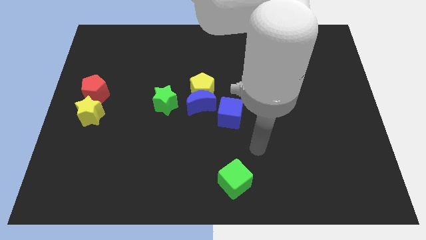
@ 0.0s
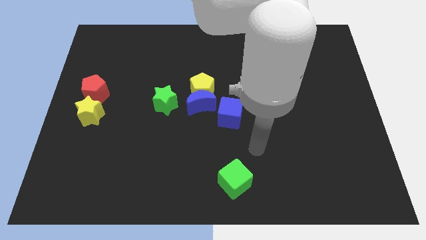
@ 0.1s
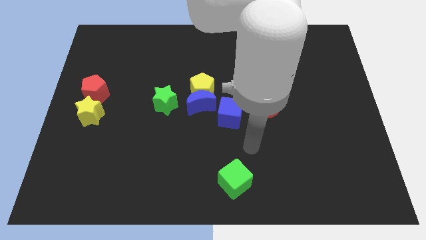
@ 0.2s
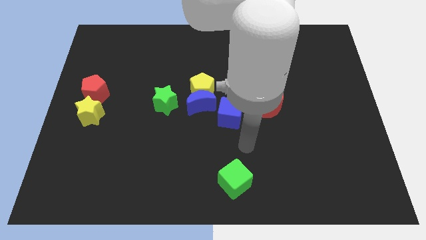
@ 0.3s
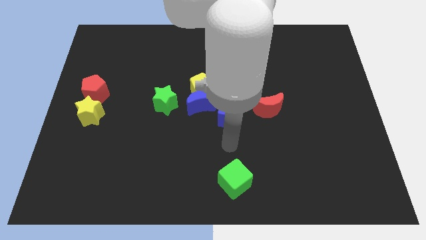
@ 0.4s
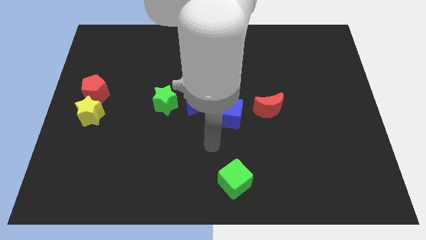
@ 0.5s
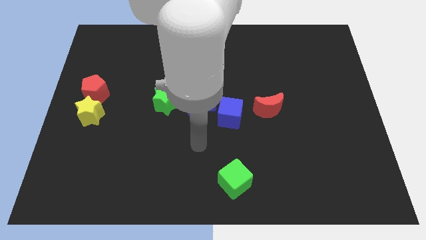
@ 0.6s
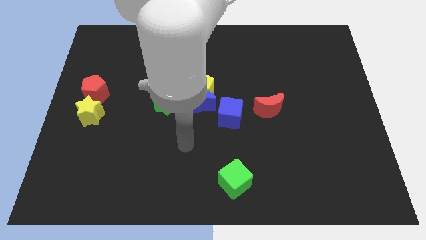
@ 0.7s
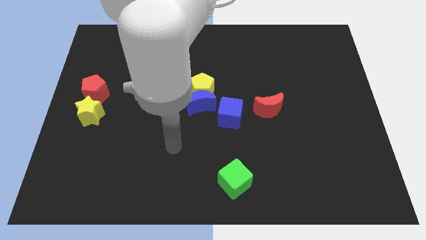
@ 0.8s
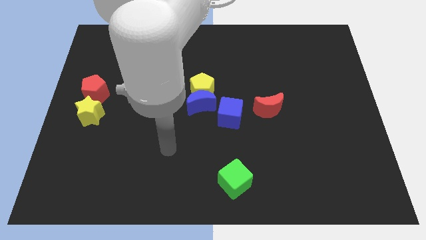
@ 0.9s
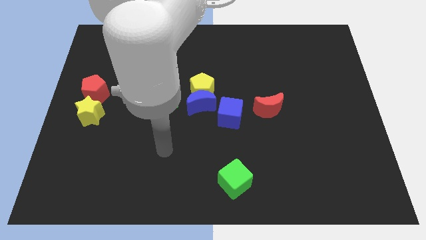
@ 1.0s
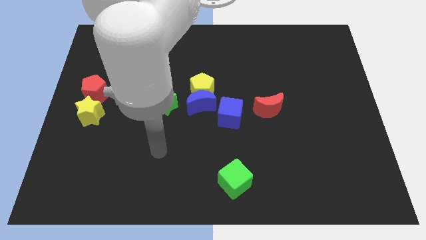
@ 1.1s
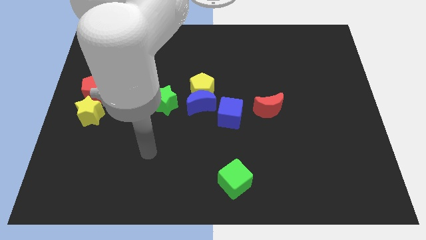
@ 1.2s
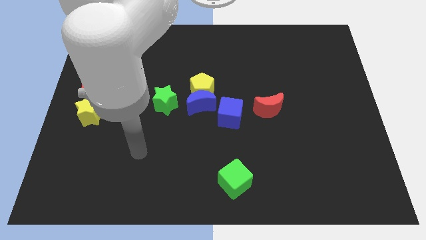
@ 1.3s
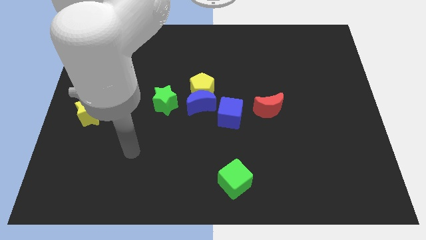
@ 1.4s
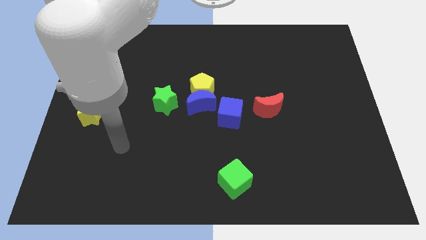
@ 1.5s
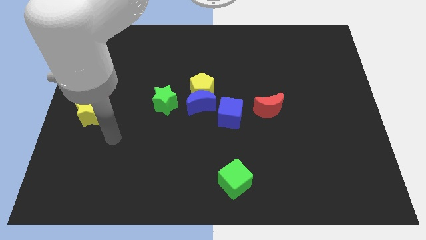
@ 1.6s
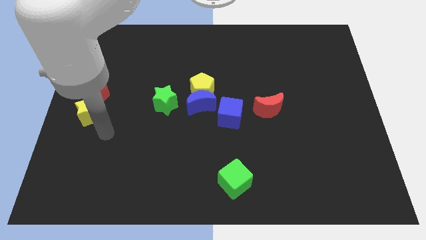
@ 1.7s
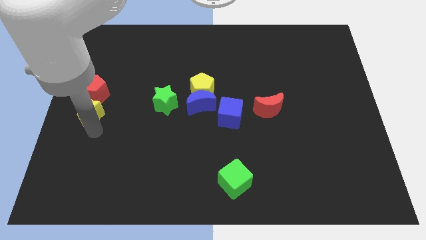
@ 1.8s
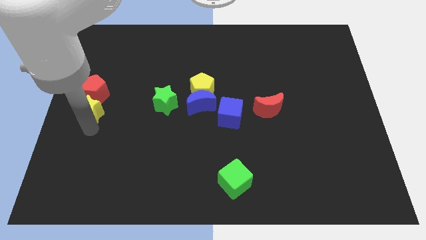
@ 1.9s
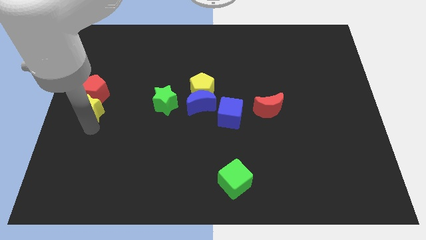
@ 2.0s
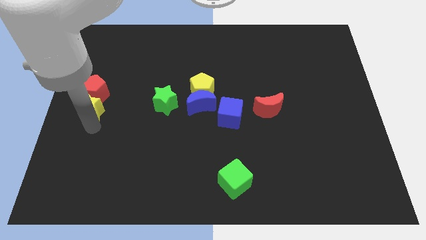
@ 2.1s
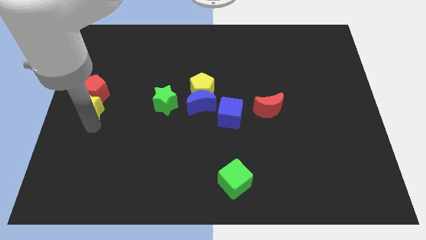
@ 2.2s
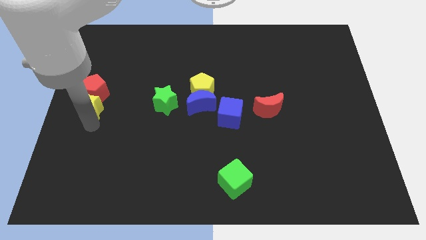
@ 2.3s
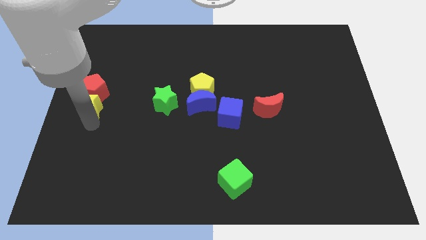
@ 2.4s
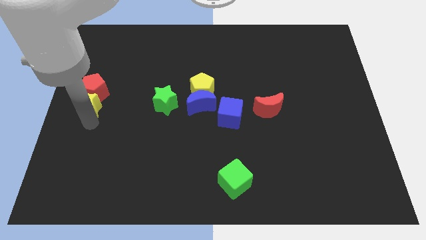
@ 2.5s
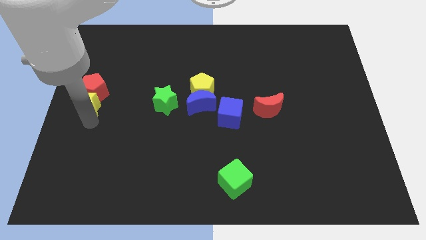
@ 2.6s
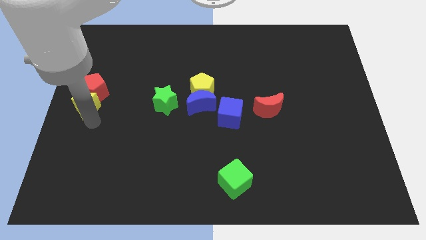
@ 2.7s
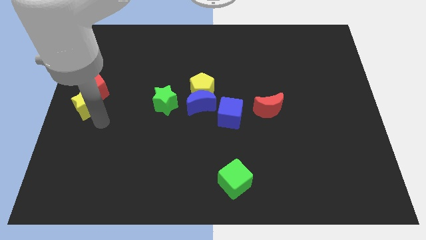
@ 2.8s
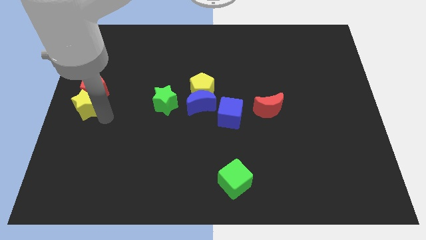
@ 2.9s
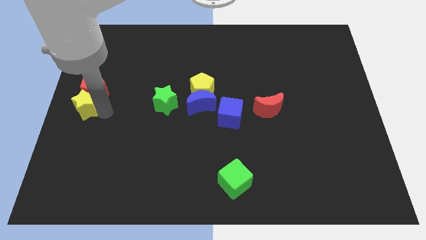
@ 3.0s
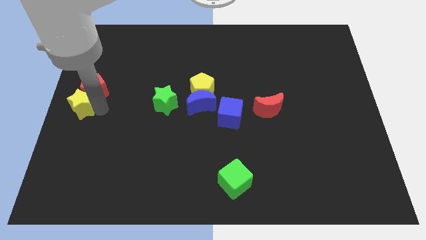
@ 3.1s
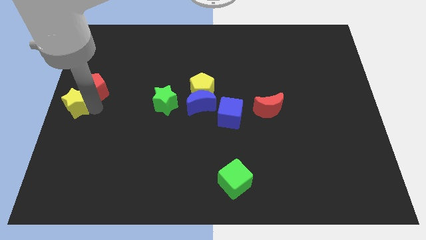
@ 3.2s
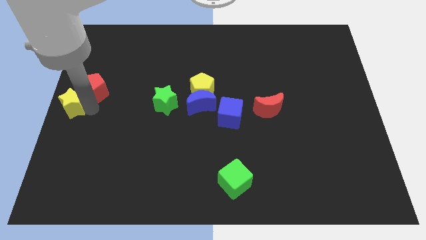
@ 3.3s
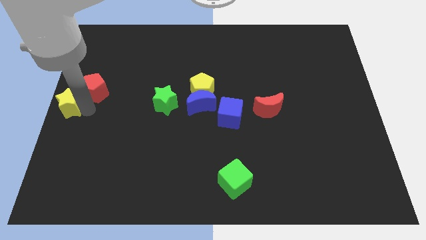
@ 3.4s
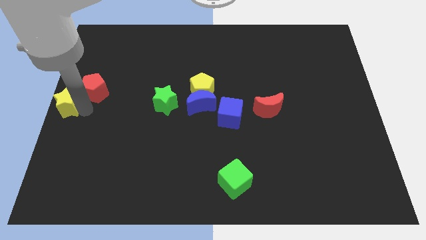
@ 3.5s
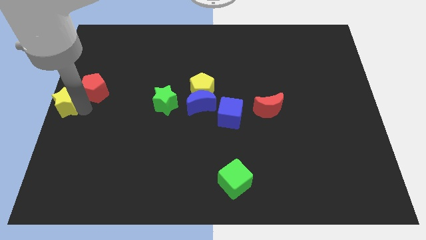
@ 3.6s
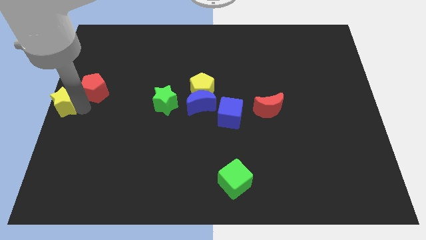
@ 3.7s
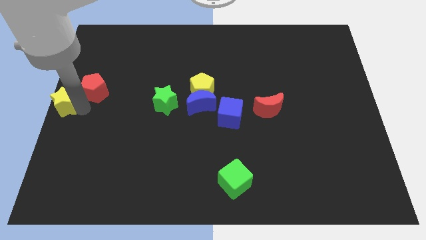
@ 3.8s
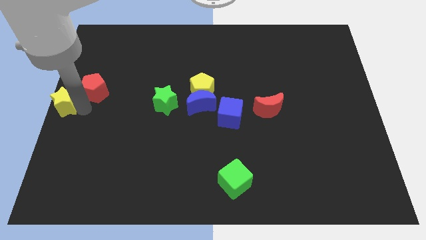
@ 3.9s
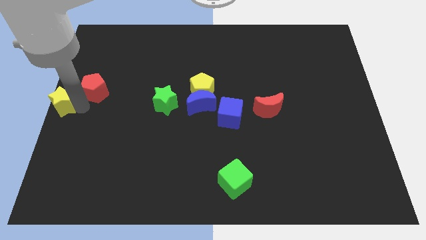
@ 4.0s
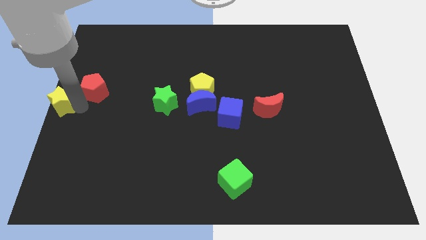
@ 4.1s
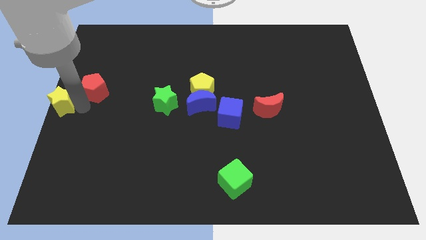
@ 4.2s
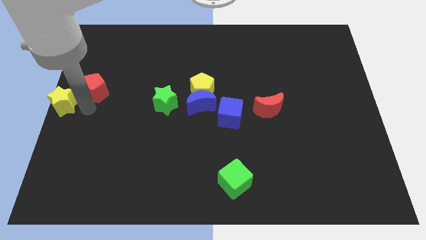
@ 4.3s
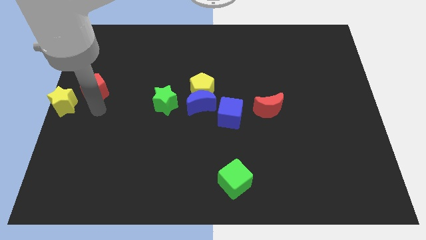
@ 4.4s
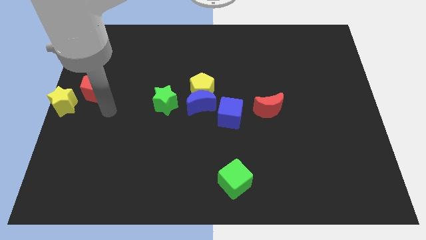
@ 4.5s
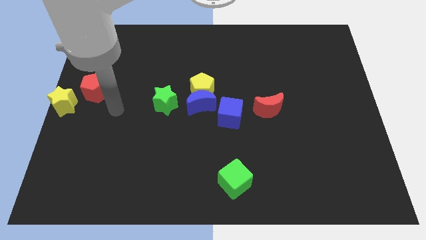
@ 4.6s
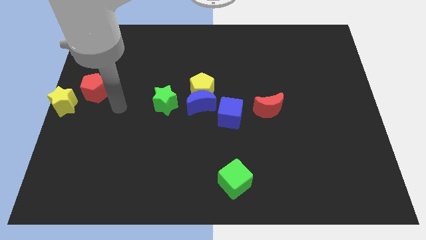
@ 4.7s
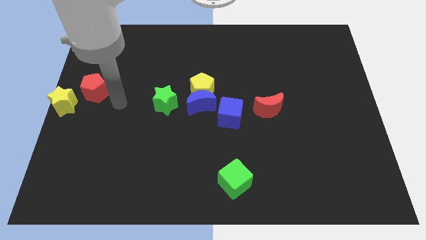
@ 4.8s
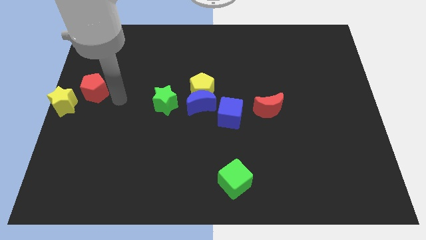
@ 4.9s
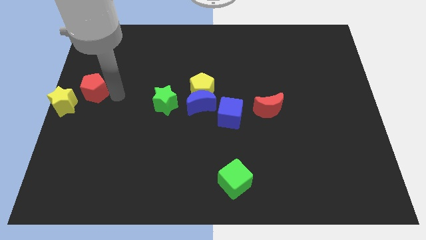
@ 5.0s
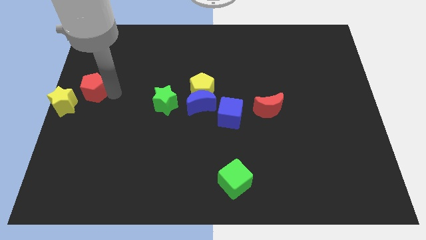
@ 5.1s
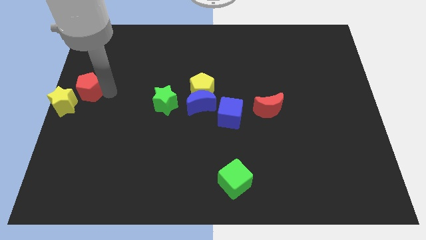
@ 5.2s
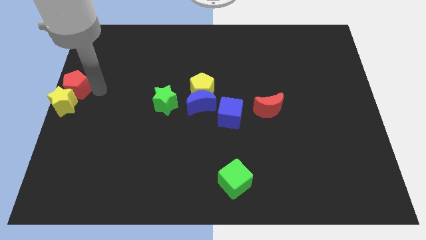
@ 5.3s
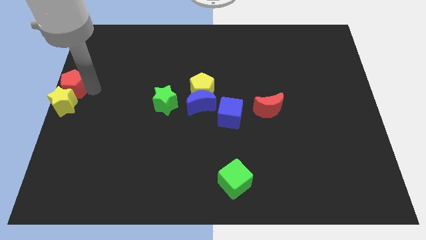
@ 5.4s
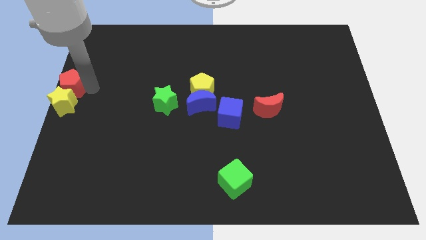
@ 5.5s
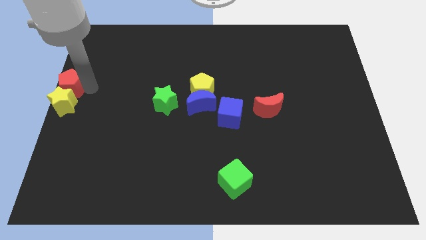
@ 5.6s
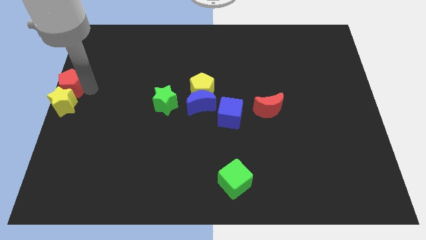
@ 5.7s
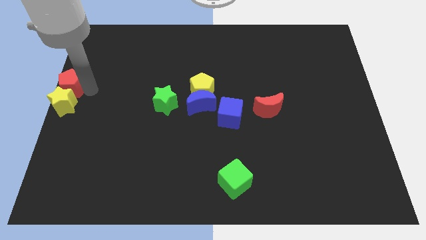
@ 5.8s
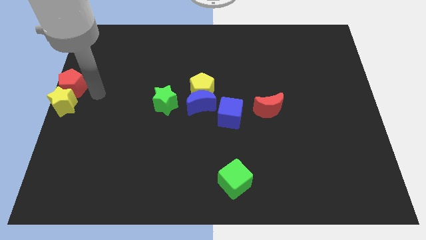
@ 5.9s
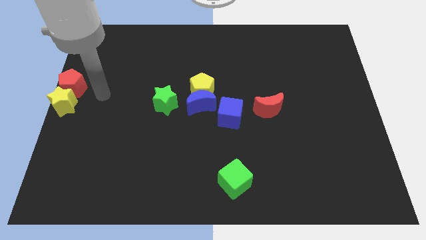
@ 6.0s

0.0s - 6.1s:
place red pentagon and yellow star to the left center of the board

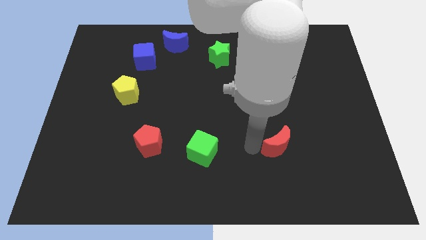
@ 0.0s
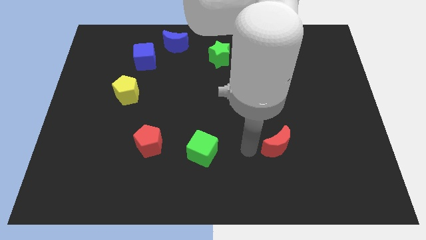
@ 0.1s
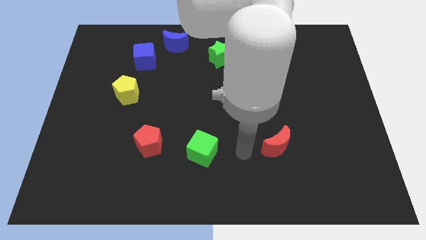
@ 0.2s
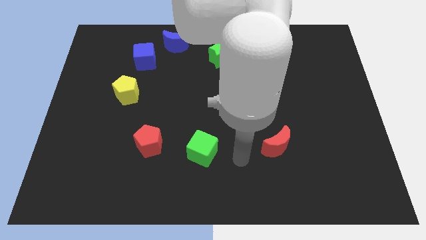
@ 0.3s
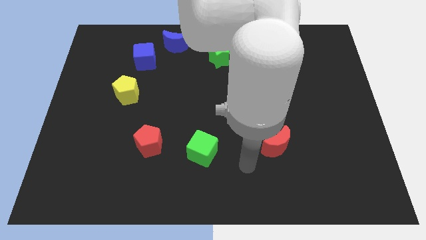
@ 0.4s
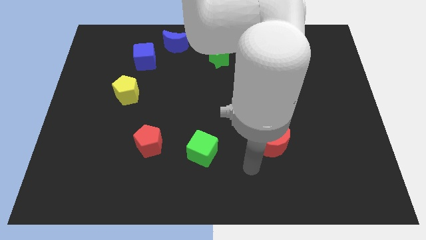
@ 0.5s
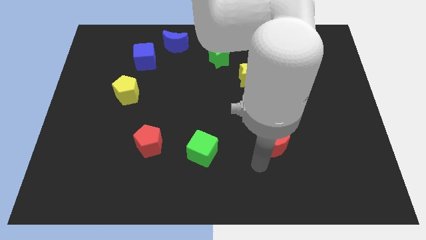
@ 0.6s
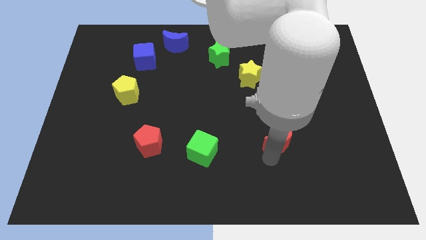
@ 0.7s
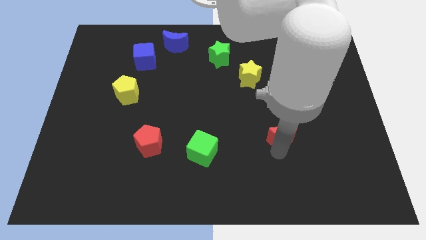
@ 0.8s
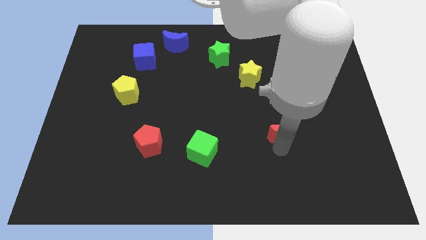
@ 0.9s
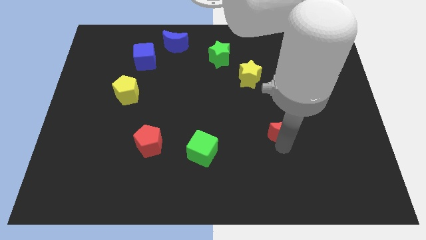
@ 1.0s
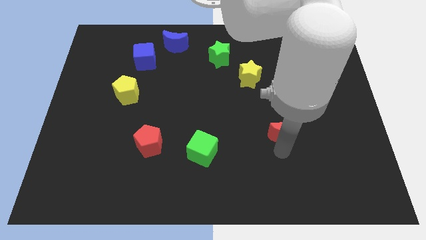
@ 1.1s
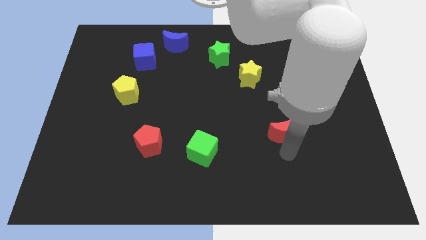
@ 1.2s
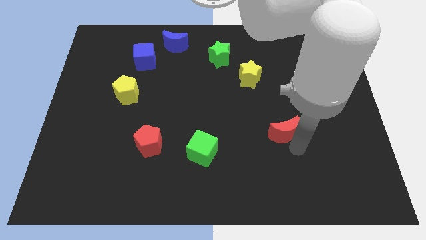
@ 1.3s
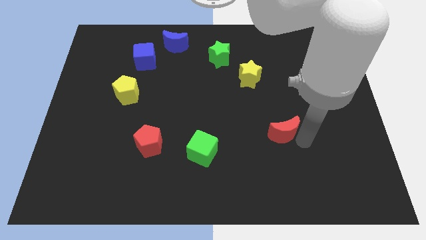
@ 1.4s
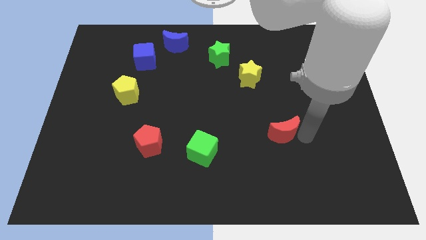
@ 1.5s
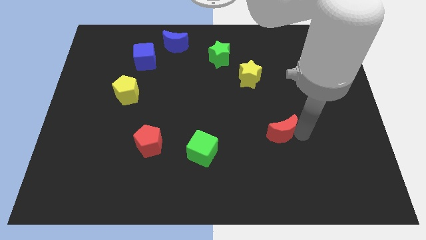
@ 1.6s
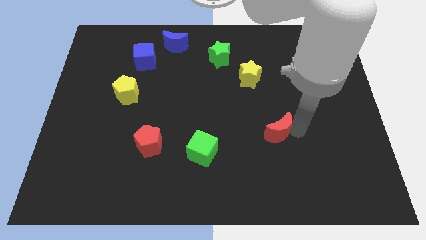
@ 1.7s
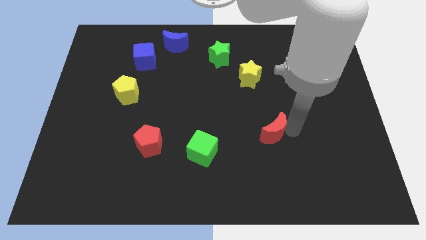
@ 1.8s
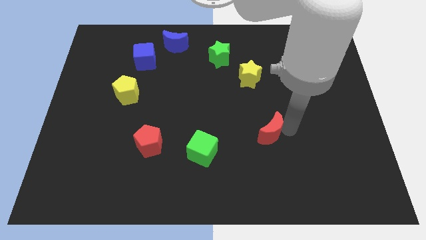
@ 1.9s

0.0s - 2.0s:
move red crescent slightly

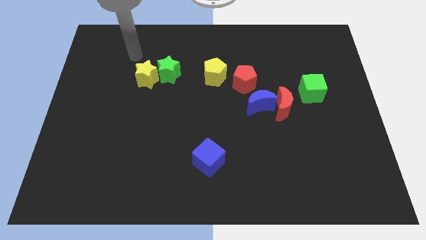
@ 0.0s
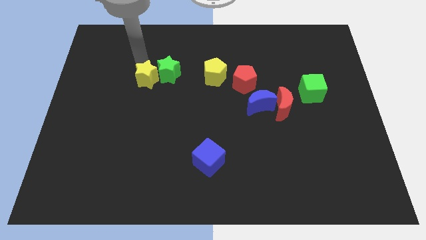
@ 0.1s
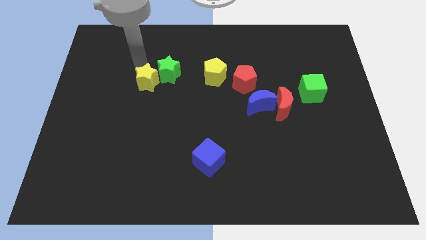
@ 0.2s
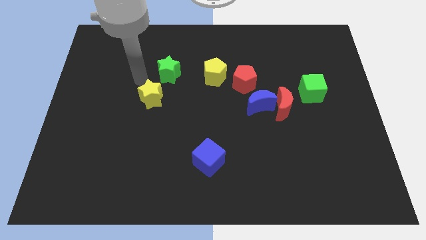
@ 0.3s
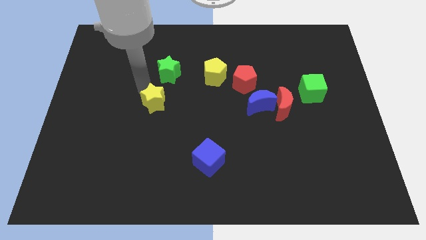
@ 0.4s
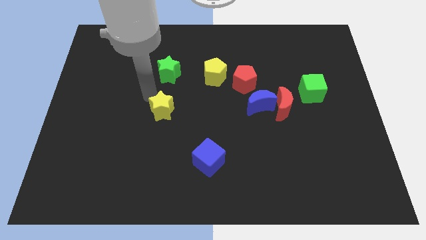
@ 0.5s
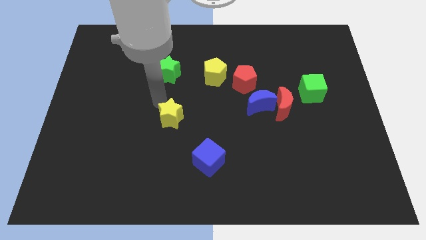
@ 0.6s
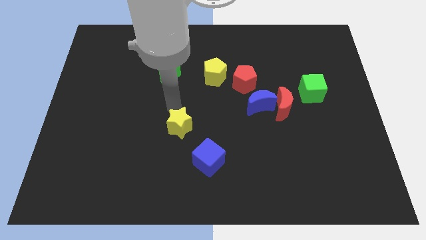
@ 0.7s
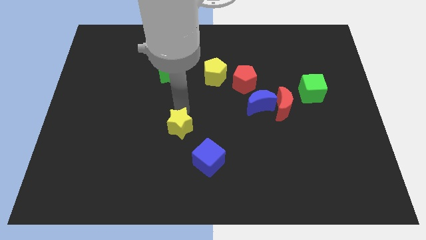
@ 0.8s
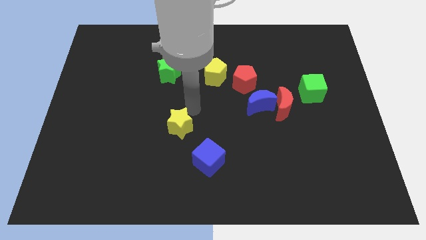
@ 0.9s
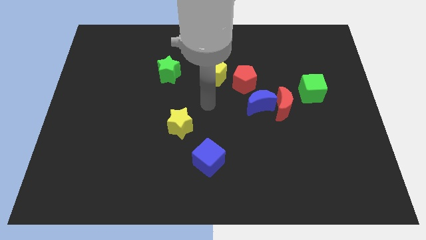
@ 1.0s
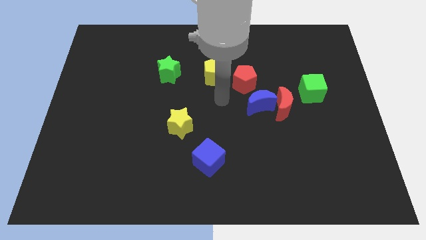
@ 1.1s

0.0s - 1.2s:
move the yellow star diagonally to the bottom right
